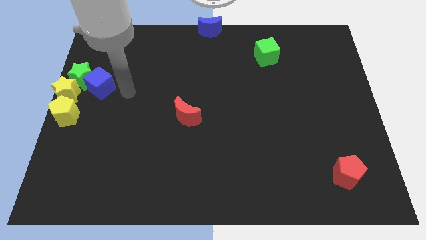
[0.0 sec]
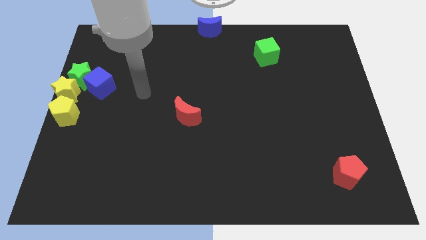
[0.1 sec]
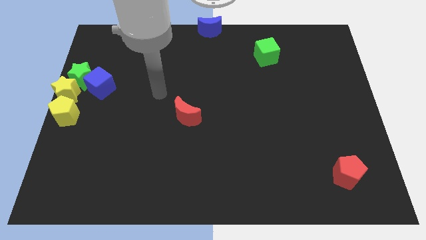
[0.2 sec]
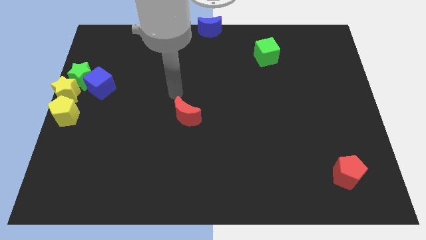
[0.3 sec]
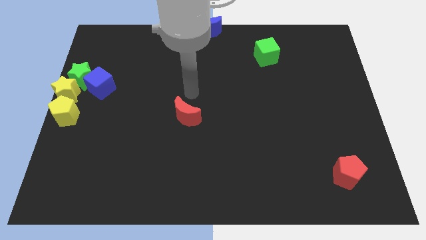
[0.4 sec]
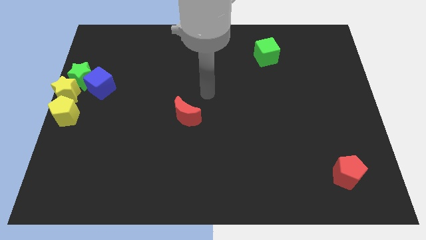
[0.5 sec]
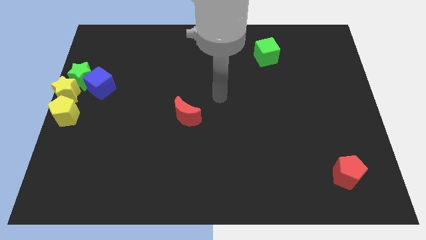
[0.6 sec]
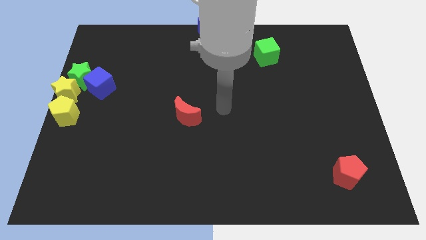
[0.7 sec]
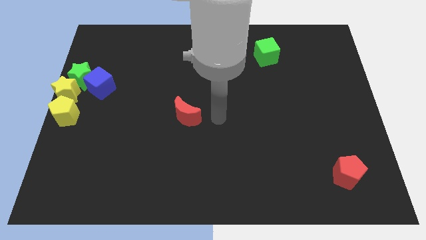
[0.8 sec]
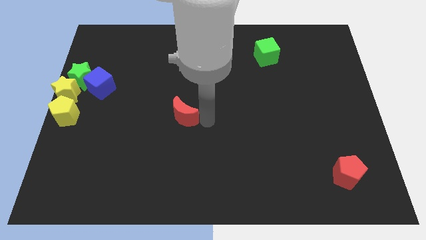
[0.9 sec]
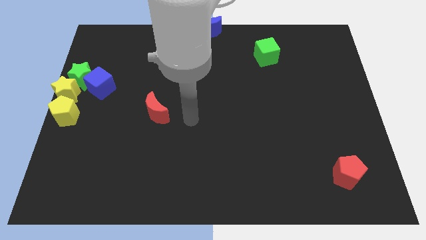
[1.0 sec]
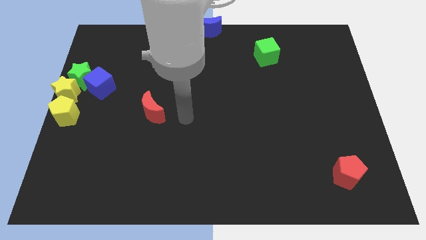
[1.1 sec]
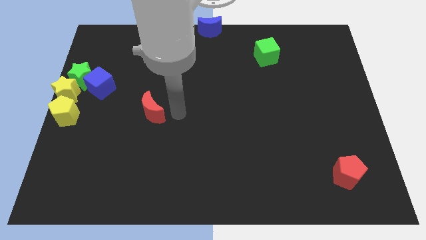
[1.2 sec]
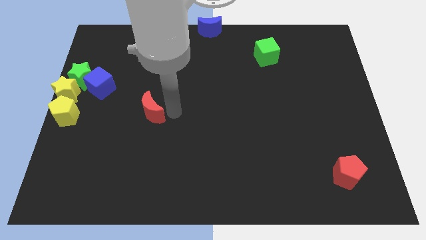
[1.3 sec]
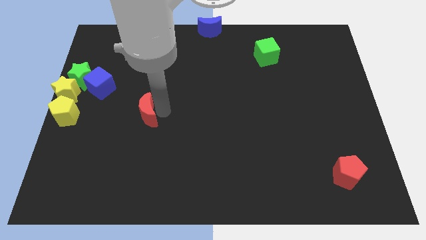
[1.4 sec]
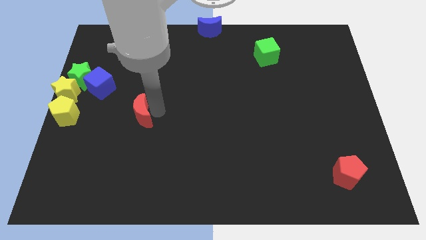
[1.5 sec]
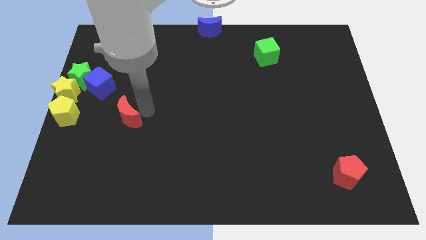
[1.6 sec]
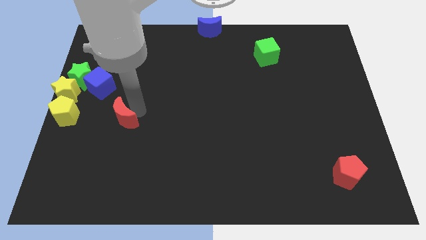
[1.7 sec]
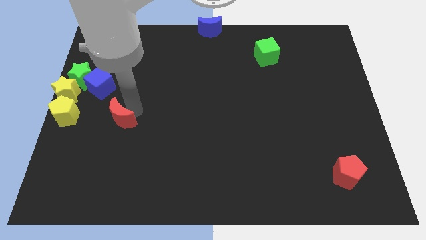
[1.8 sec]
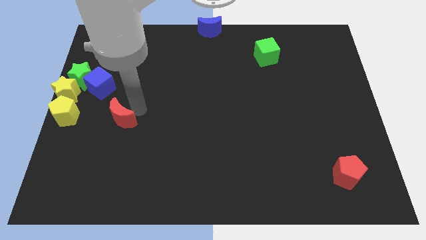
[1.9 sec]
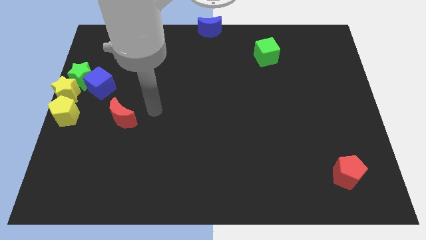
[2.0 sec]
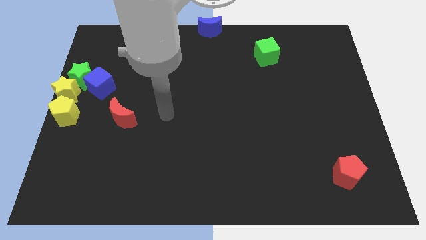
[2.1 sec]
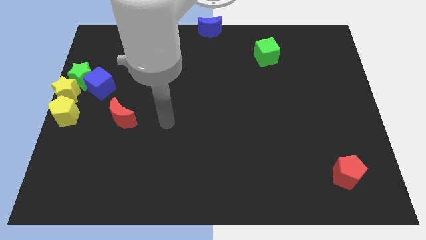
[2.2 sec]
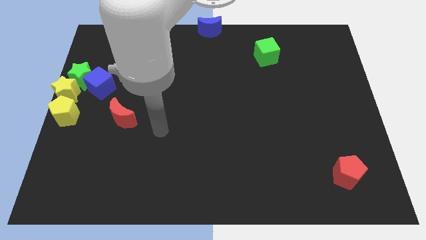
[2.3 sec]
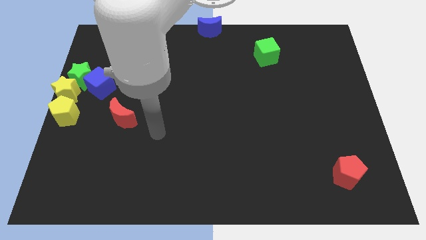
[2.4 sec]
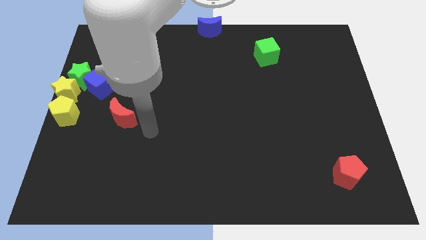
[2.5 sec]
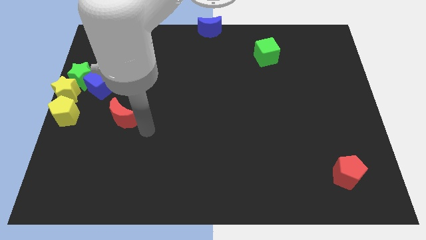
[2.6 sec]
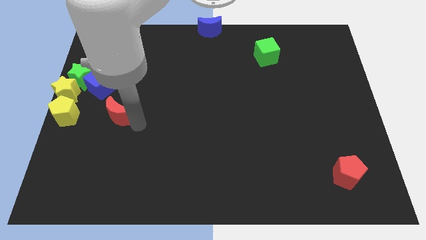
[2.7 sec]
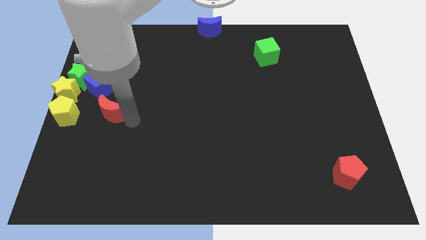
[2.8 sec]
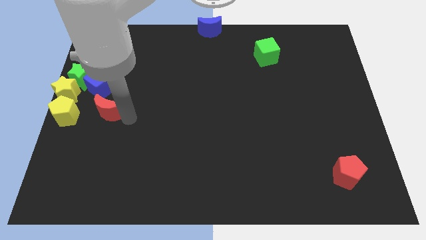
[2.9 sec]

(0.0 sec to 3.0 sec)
slide the red moon towards the left

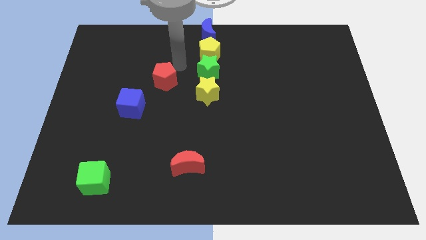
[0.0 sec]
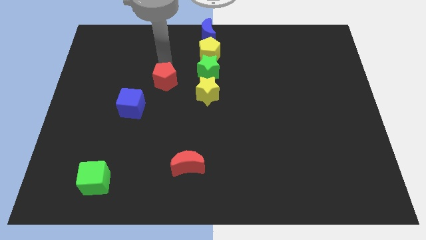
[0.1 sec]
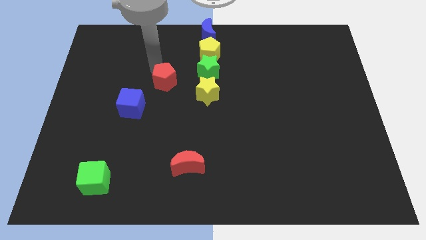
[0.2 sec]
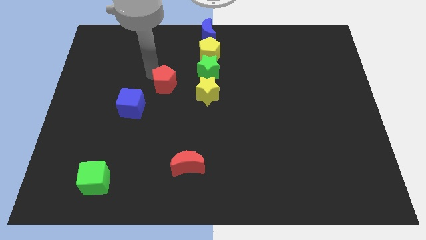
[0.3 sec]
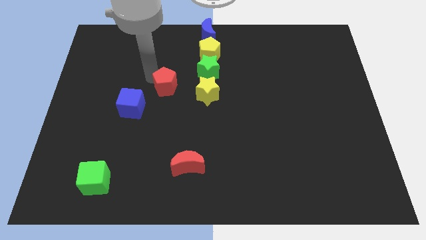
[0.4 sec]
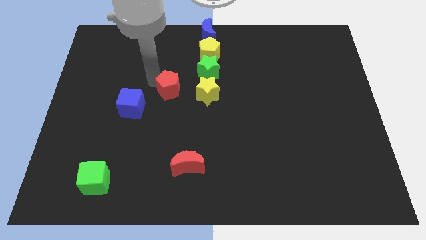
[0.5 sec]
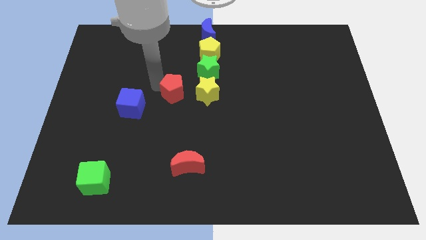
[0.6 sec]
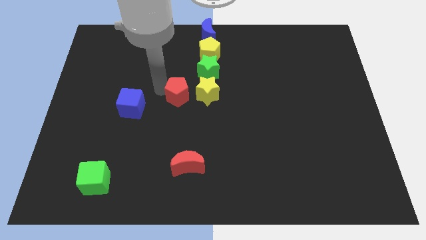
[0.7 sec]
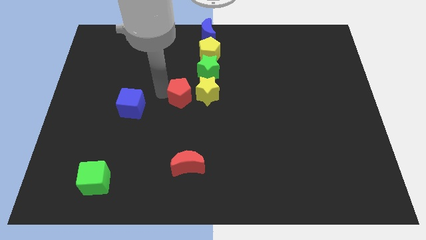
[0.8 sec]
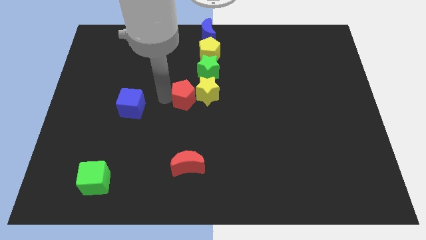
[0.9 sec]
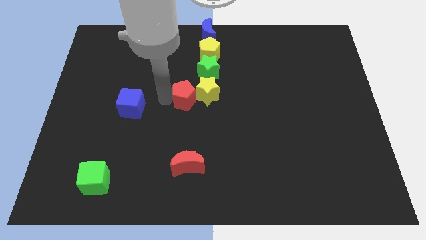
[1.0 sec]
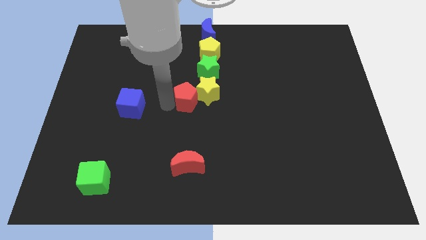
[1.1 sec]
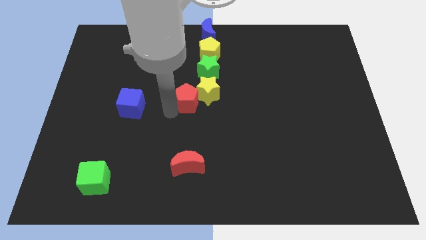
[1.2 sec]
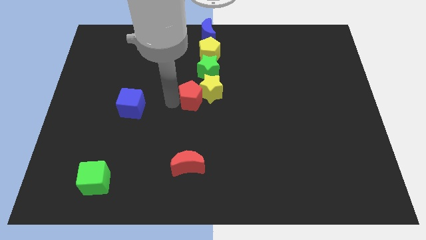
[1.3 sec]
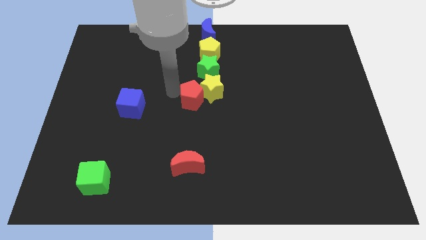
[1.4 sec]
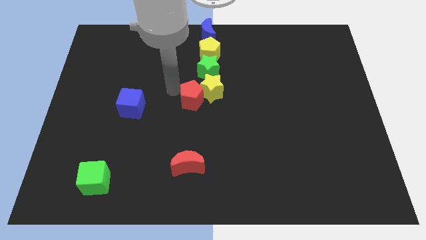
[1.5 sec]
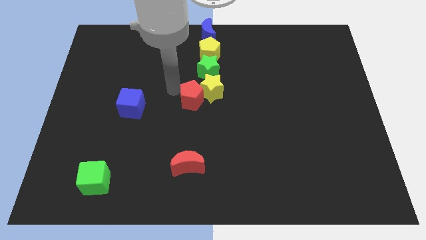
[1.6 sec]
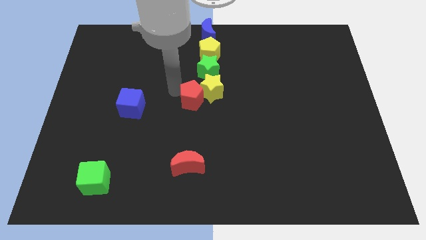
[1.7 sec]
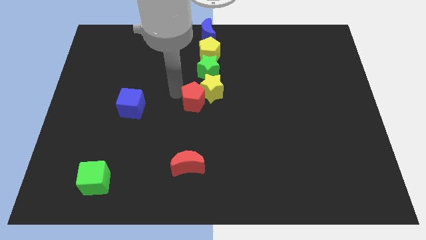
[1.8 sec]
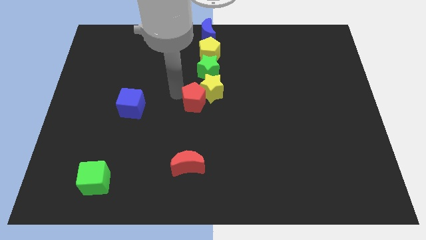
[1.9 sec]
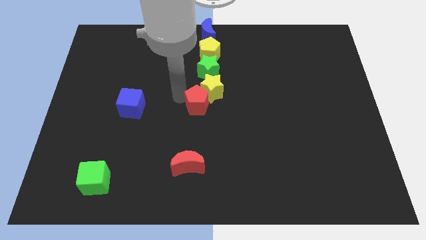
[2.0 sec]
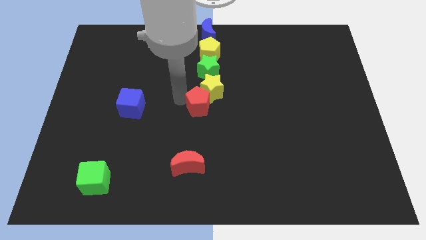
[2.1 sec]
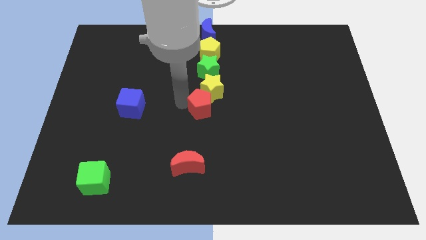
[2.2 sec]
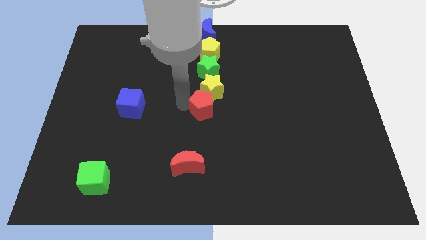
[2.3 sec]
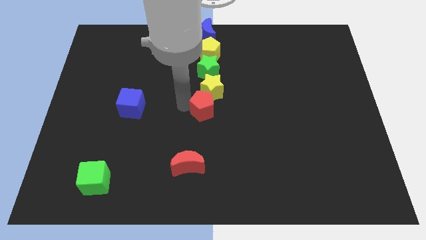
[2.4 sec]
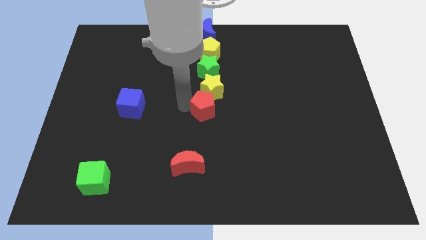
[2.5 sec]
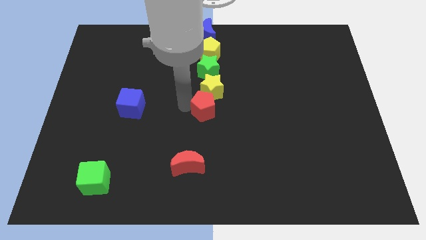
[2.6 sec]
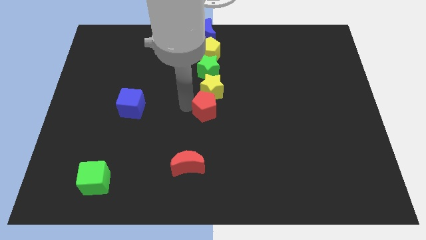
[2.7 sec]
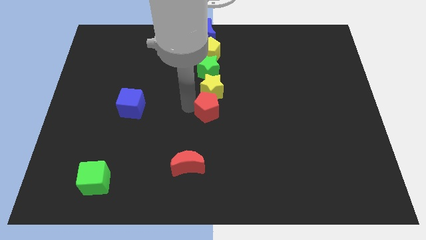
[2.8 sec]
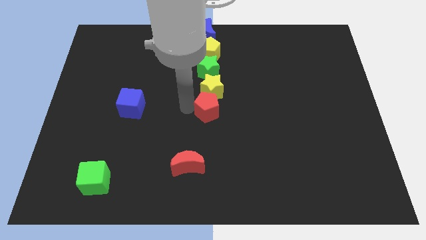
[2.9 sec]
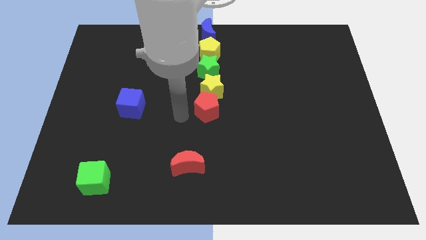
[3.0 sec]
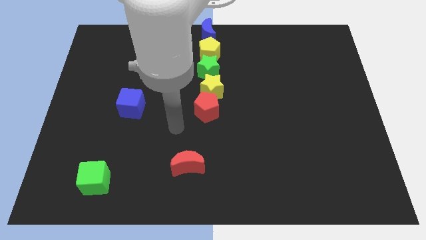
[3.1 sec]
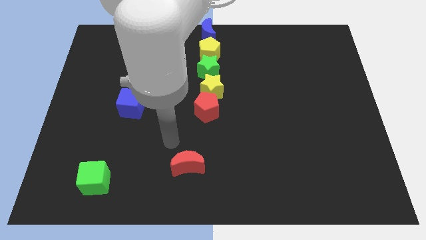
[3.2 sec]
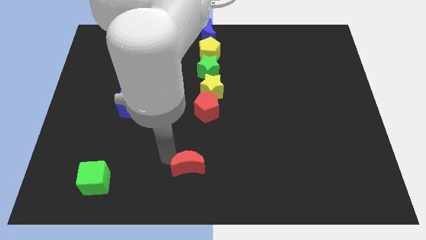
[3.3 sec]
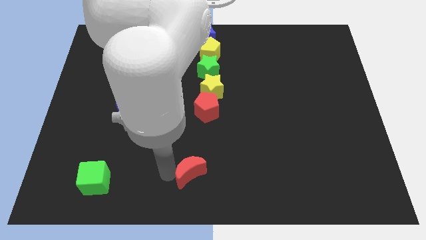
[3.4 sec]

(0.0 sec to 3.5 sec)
drag the red pentagon to the bottom side of the yellow star

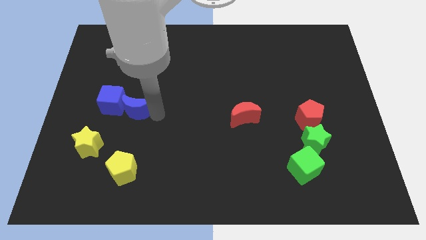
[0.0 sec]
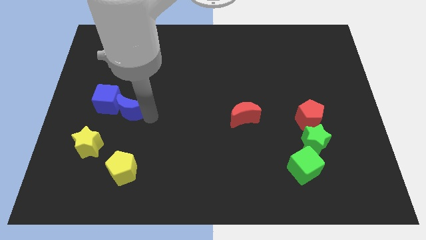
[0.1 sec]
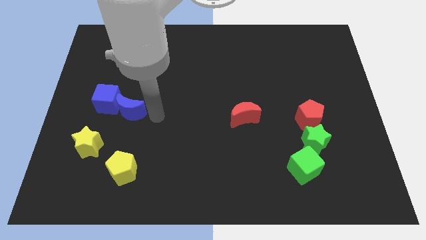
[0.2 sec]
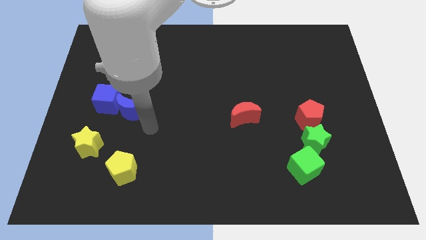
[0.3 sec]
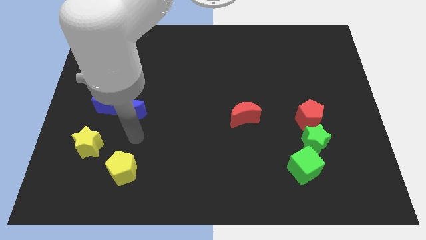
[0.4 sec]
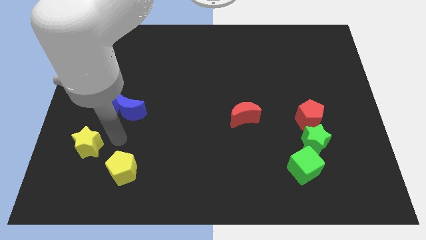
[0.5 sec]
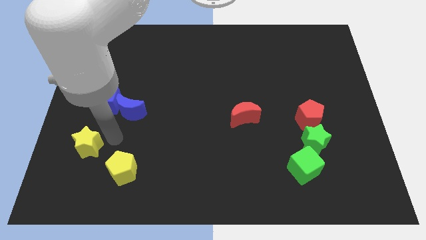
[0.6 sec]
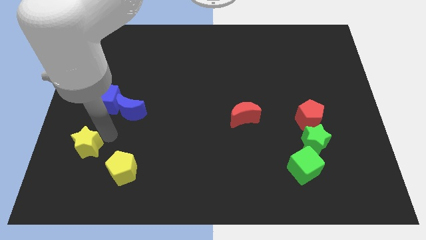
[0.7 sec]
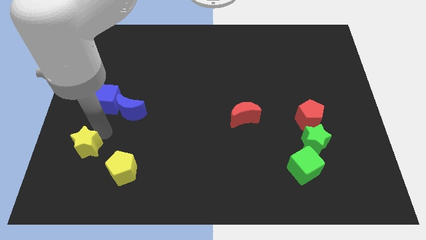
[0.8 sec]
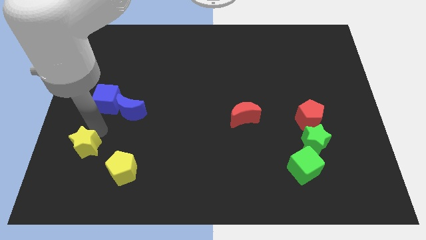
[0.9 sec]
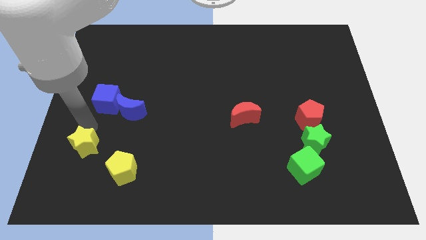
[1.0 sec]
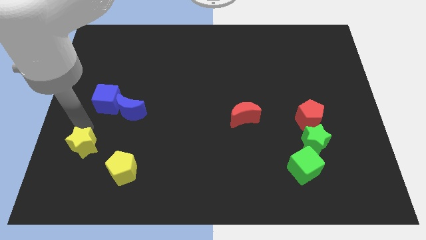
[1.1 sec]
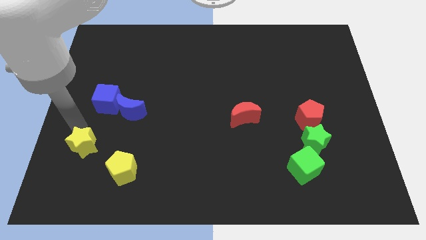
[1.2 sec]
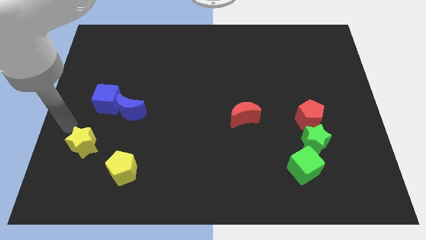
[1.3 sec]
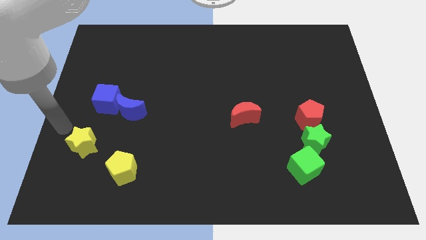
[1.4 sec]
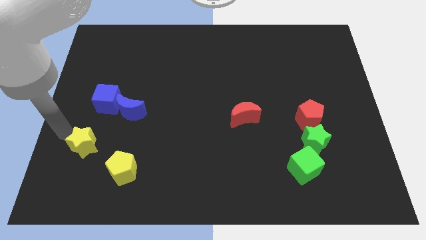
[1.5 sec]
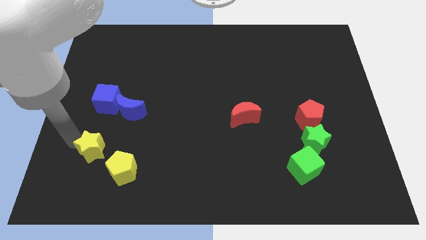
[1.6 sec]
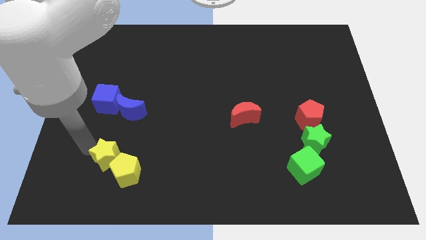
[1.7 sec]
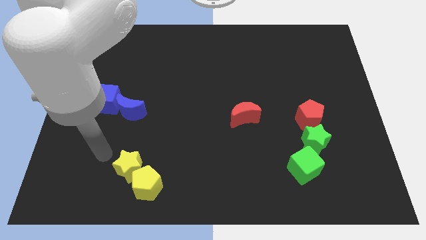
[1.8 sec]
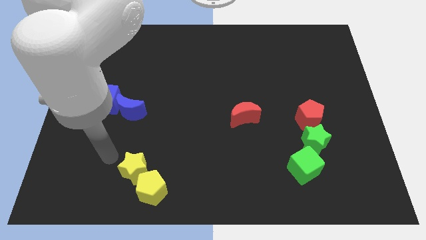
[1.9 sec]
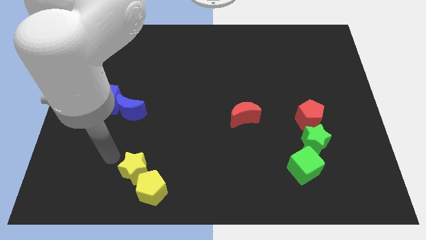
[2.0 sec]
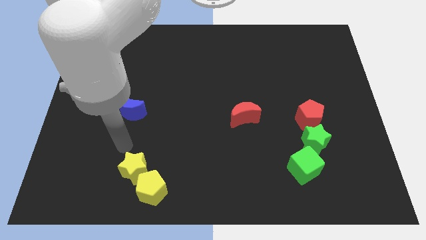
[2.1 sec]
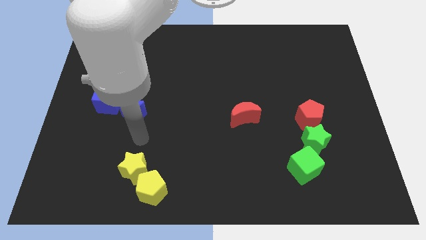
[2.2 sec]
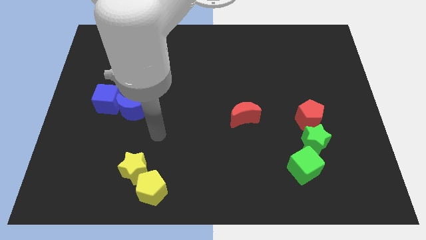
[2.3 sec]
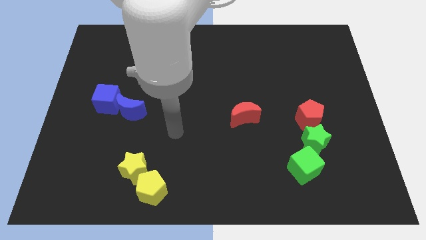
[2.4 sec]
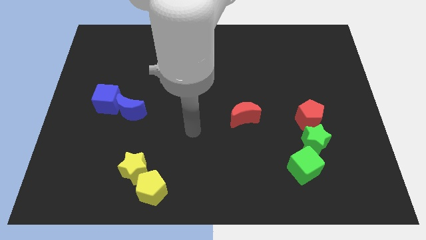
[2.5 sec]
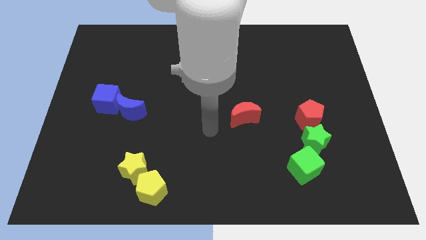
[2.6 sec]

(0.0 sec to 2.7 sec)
push the yellow star into the yellow pentagon
